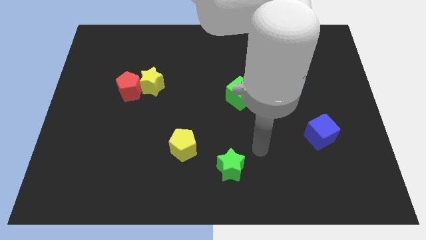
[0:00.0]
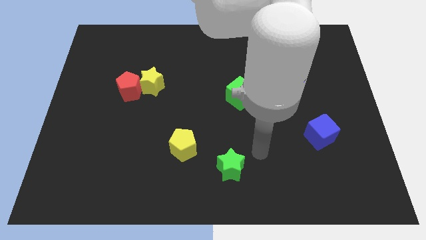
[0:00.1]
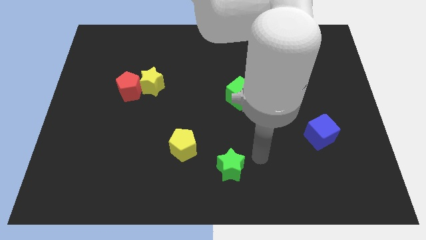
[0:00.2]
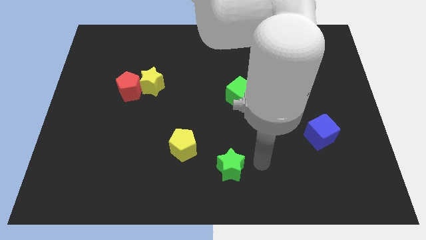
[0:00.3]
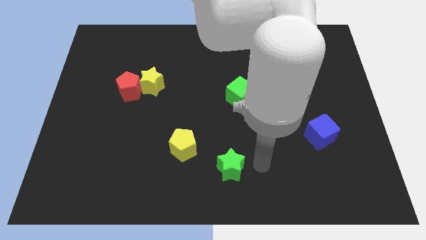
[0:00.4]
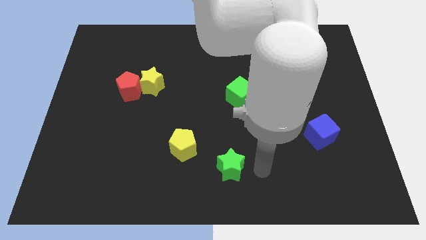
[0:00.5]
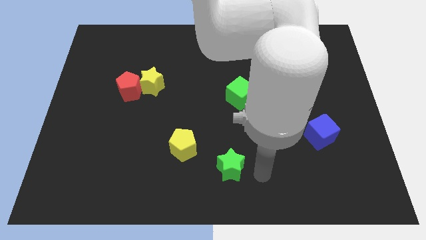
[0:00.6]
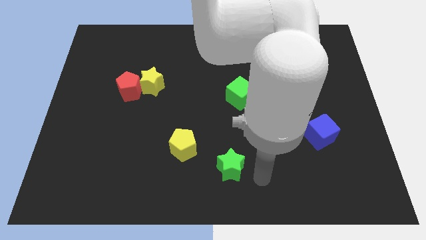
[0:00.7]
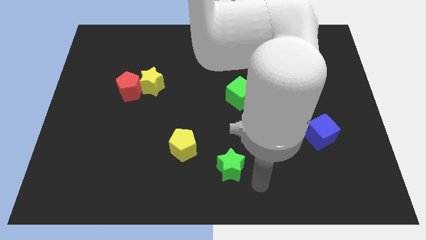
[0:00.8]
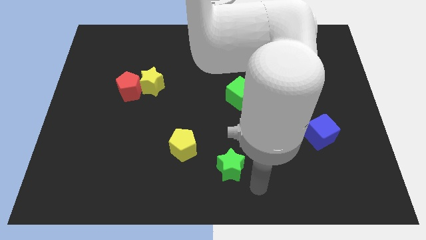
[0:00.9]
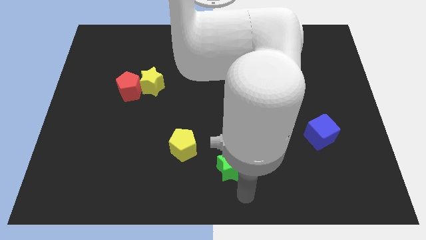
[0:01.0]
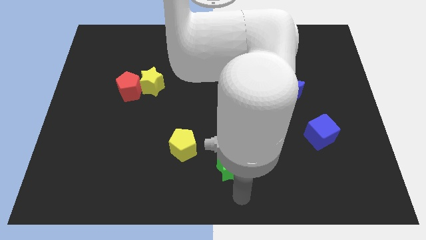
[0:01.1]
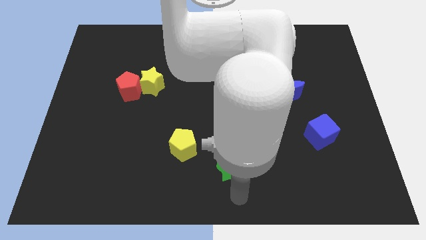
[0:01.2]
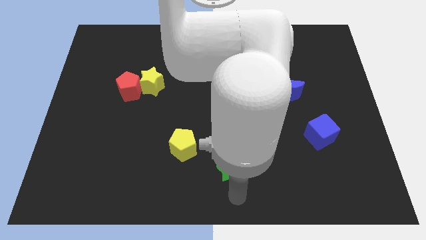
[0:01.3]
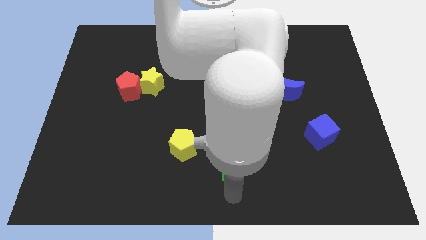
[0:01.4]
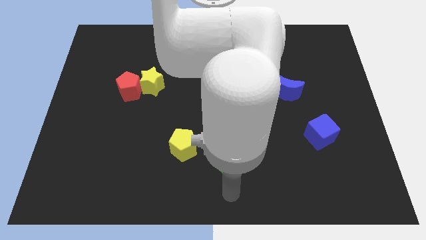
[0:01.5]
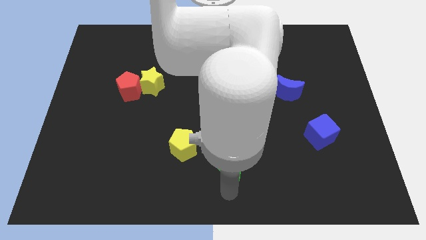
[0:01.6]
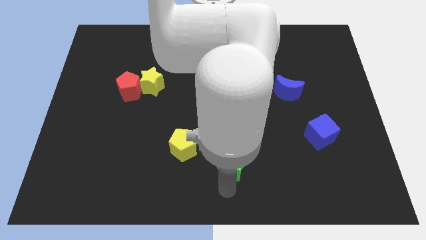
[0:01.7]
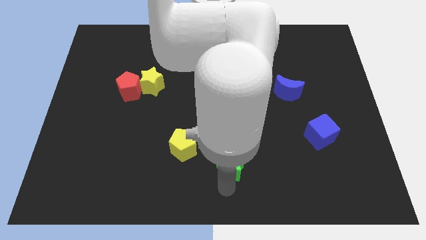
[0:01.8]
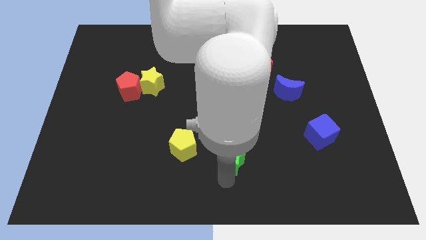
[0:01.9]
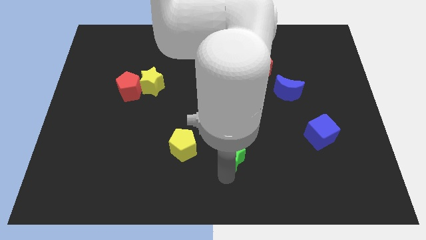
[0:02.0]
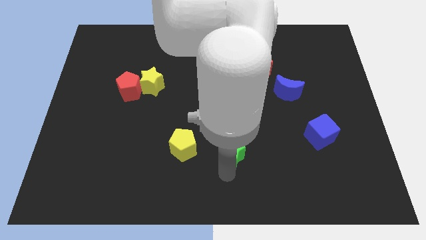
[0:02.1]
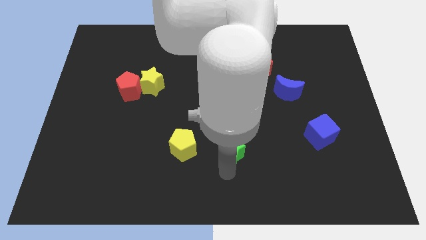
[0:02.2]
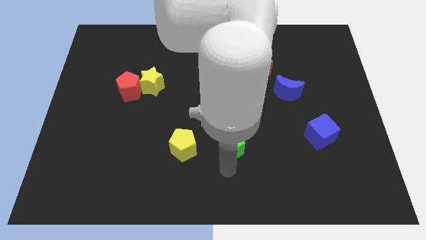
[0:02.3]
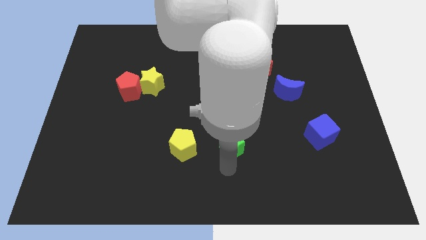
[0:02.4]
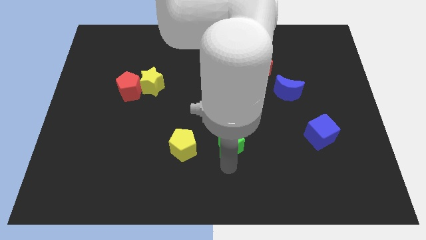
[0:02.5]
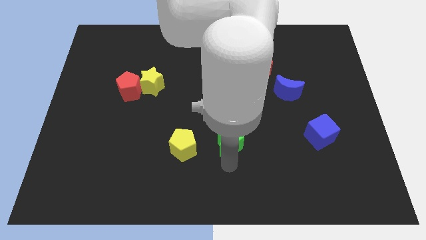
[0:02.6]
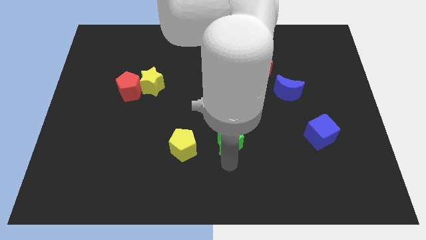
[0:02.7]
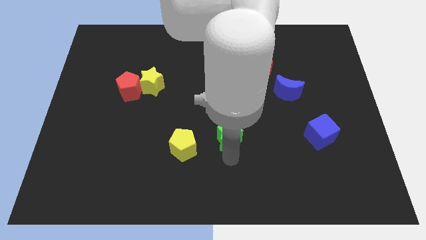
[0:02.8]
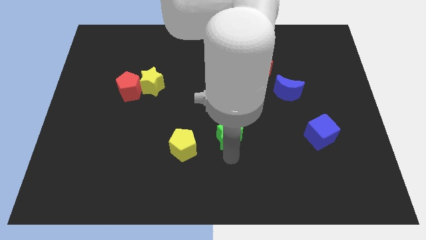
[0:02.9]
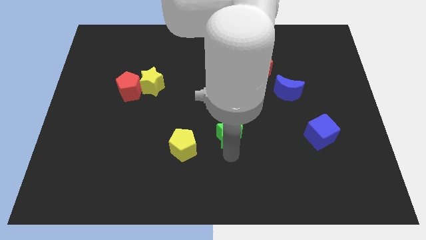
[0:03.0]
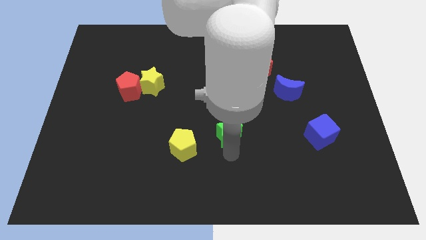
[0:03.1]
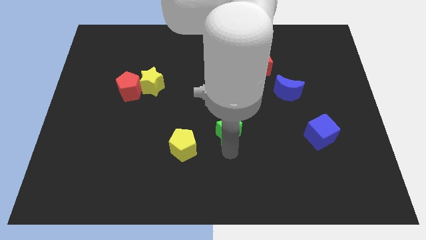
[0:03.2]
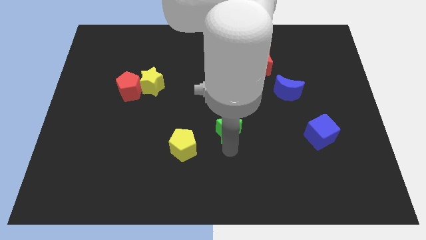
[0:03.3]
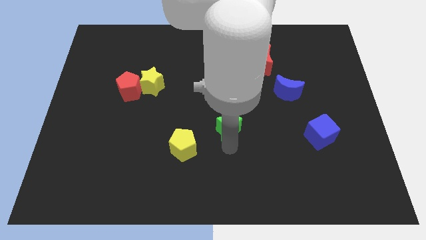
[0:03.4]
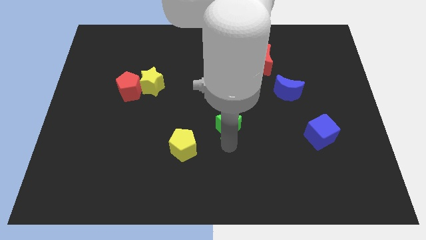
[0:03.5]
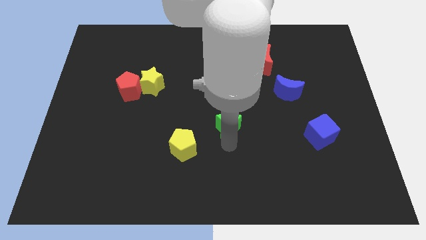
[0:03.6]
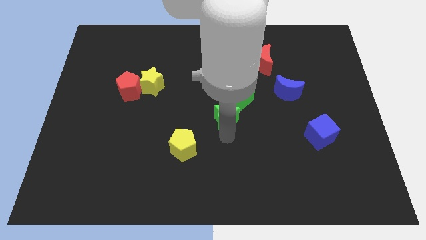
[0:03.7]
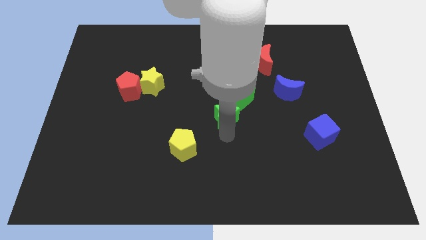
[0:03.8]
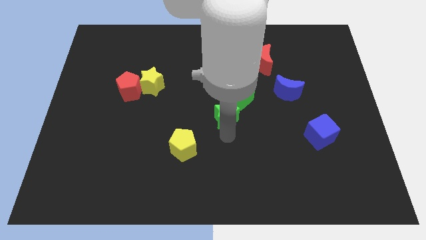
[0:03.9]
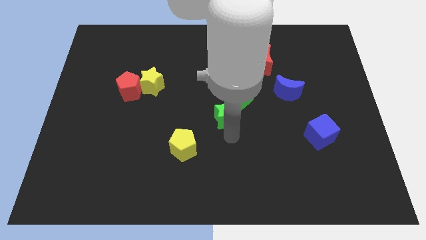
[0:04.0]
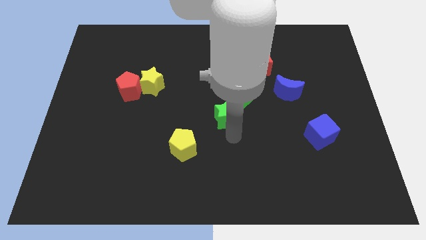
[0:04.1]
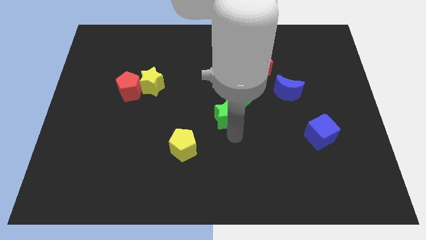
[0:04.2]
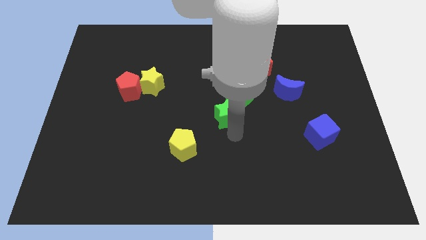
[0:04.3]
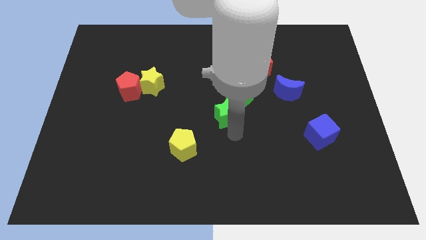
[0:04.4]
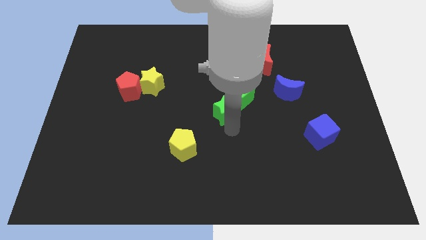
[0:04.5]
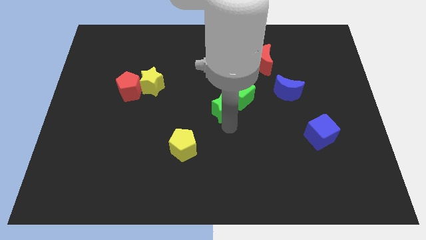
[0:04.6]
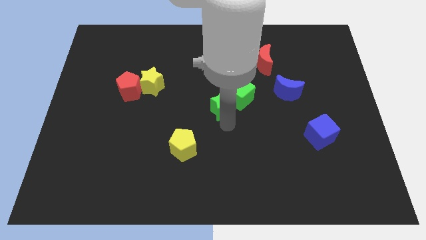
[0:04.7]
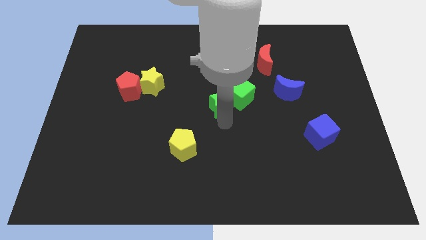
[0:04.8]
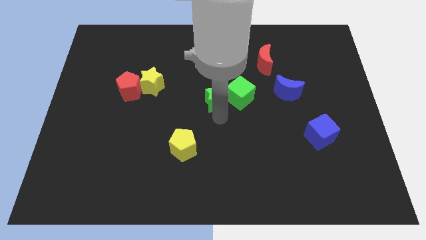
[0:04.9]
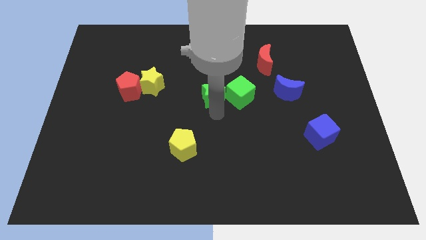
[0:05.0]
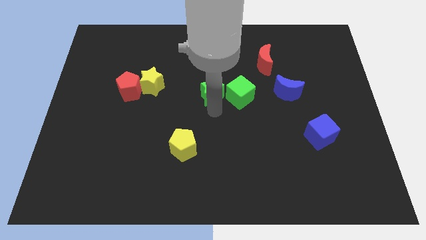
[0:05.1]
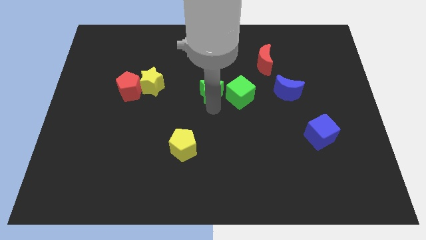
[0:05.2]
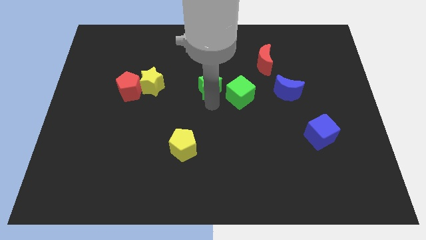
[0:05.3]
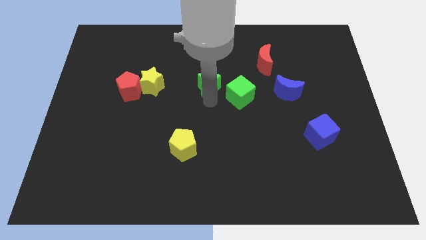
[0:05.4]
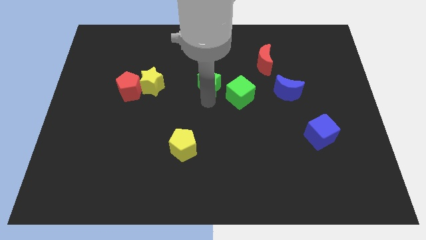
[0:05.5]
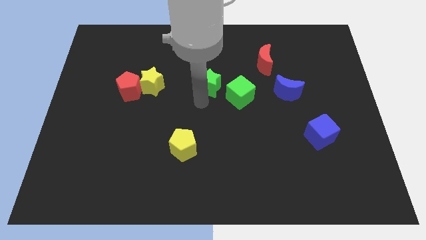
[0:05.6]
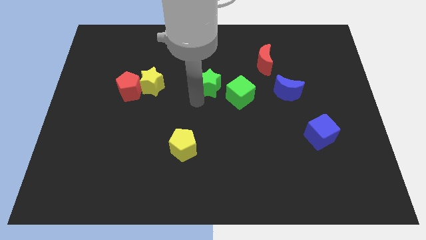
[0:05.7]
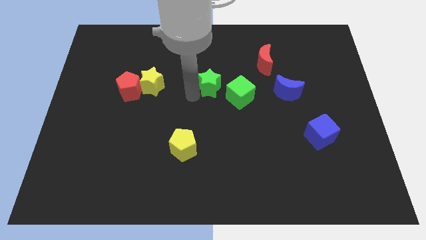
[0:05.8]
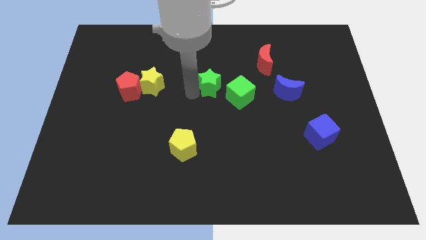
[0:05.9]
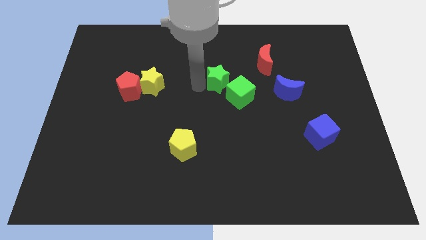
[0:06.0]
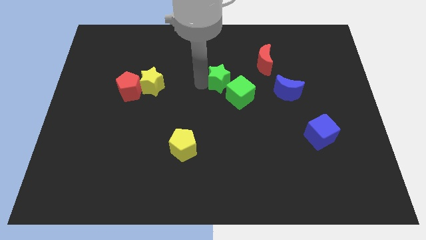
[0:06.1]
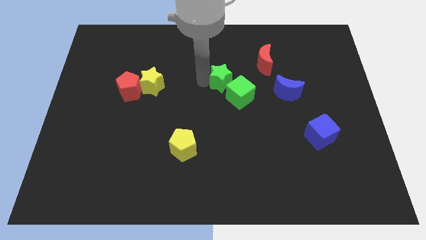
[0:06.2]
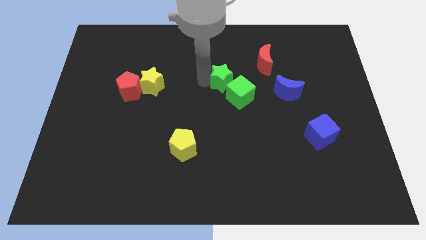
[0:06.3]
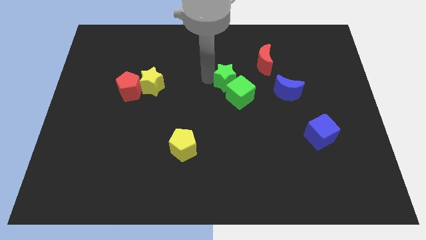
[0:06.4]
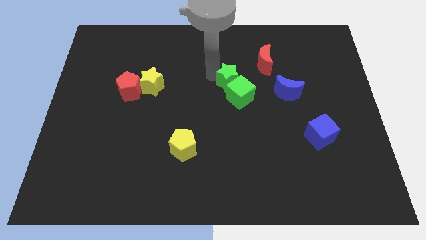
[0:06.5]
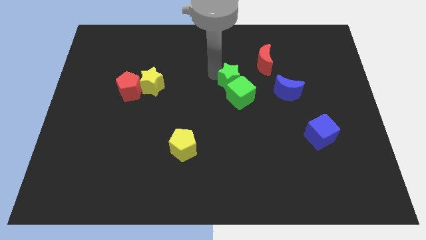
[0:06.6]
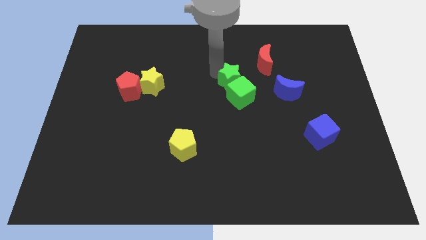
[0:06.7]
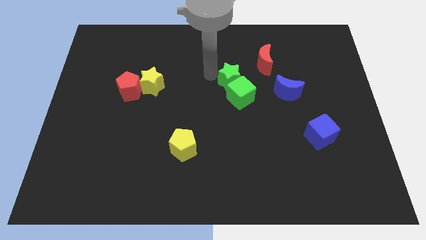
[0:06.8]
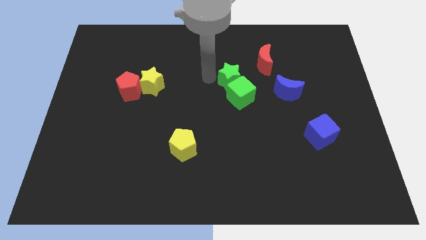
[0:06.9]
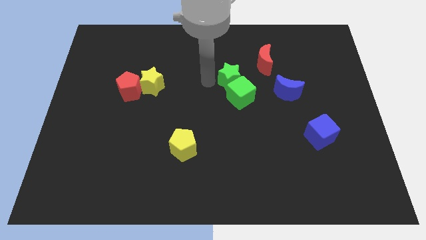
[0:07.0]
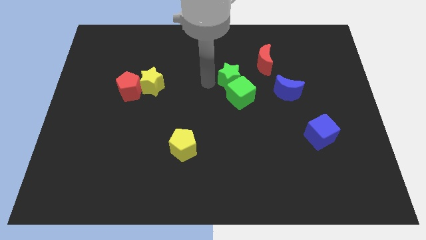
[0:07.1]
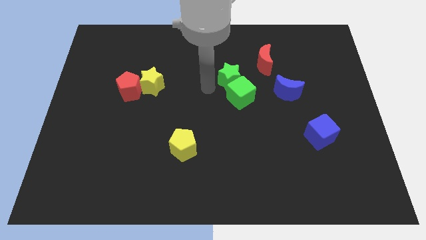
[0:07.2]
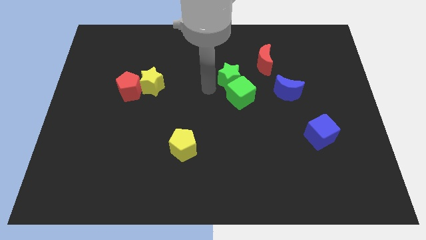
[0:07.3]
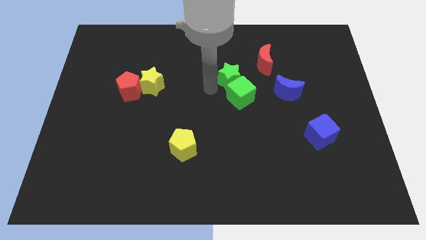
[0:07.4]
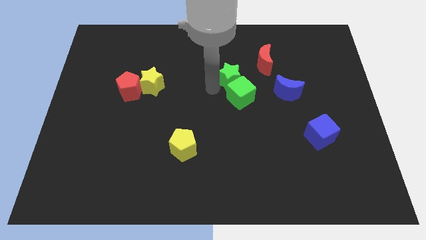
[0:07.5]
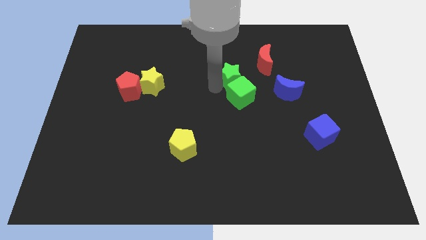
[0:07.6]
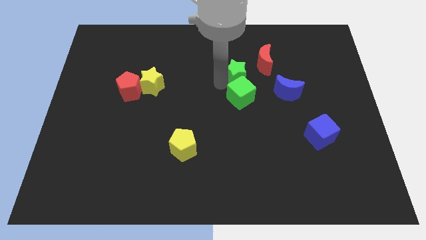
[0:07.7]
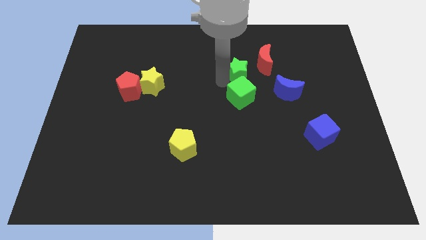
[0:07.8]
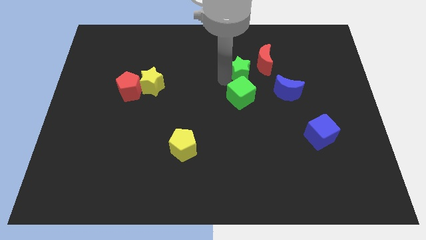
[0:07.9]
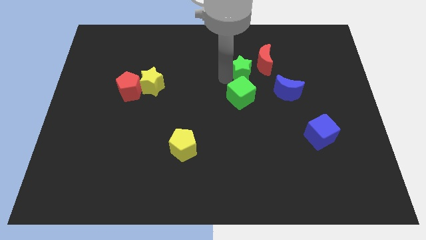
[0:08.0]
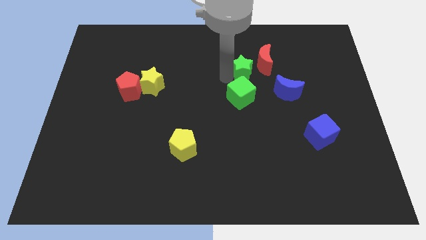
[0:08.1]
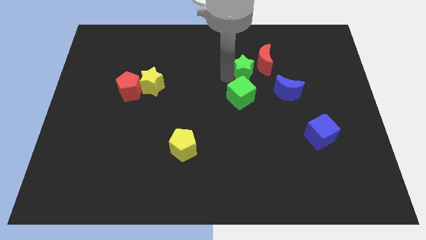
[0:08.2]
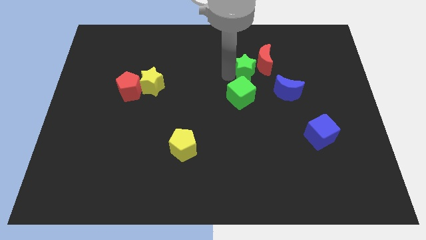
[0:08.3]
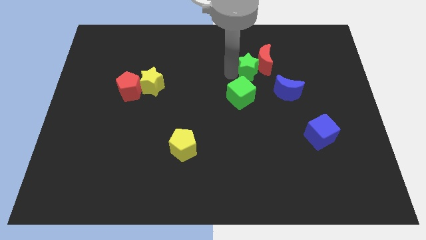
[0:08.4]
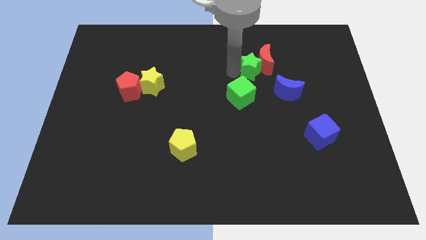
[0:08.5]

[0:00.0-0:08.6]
slide the green star towards the red moon
